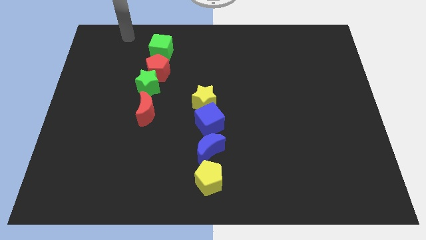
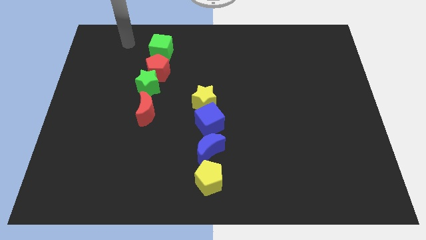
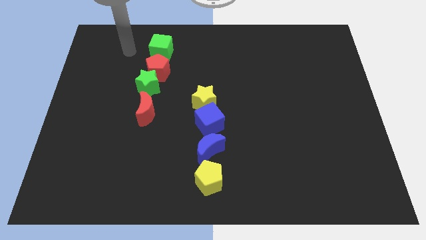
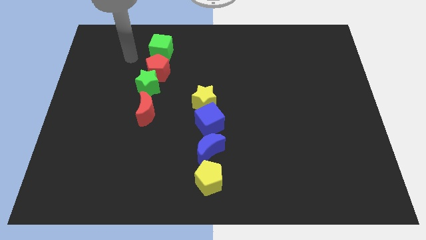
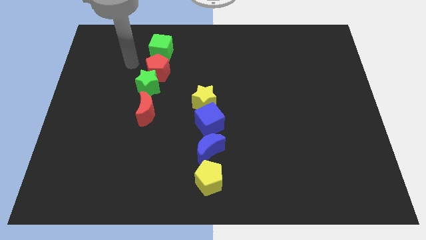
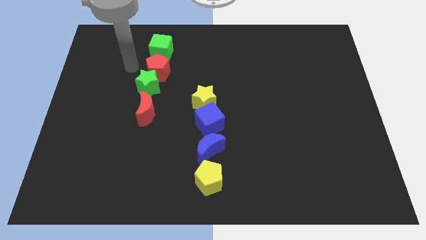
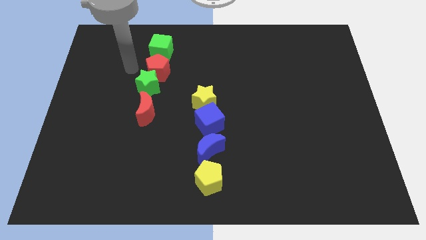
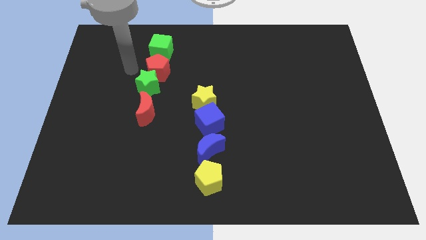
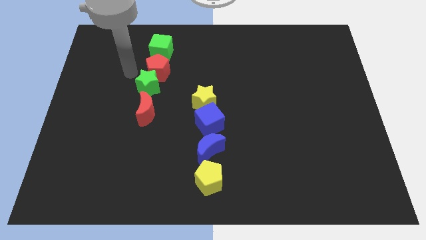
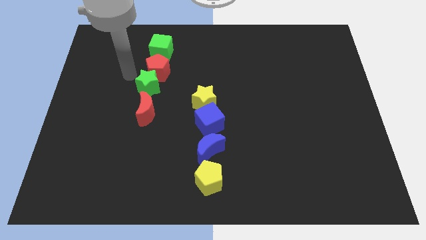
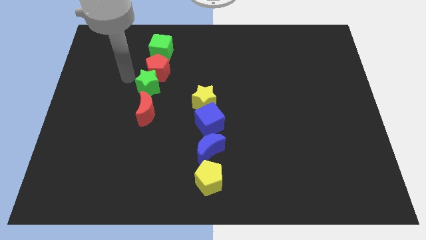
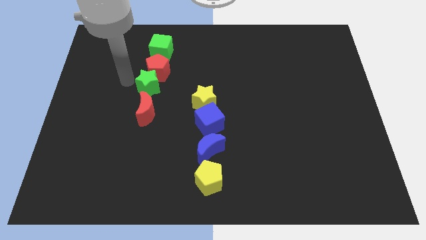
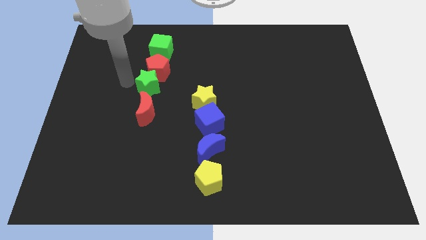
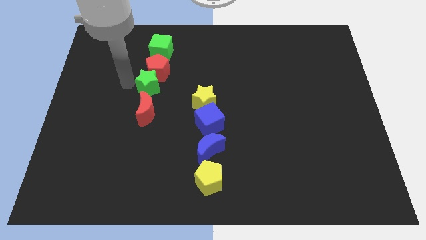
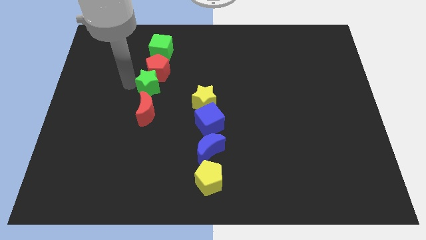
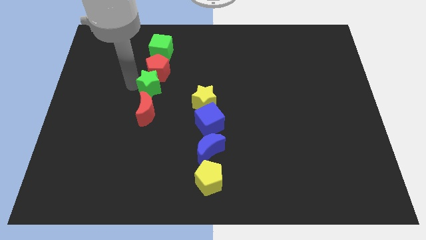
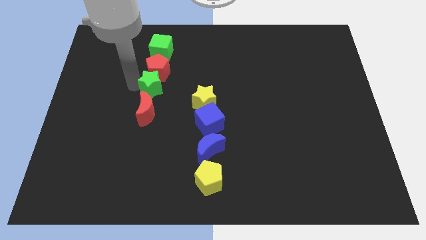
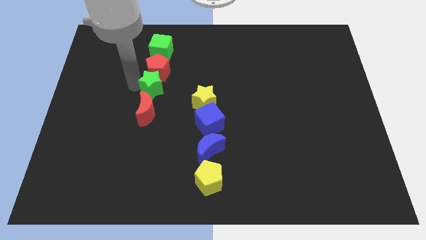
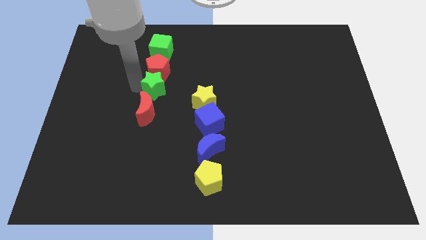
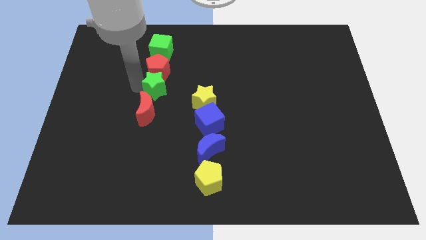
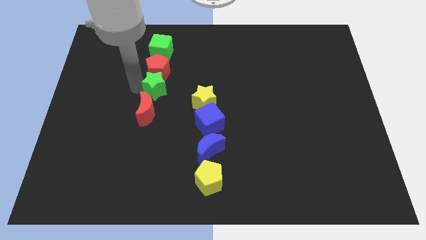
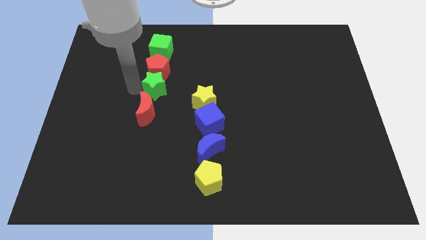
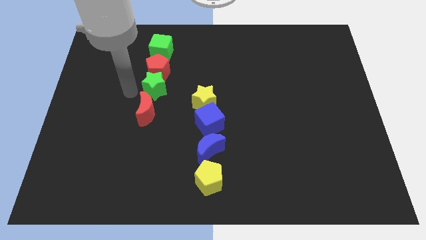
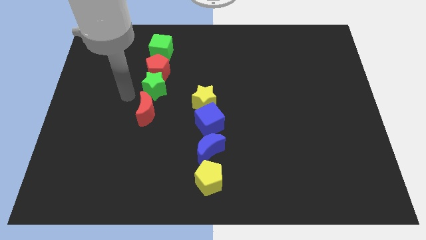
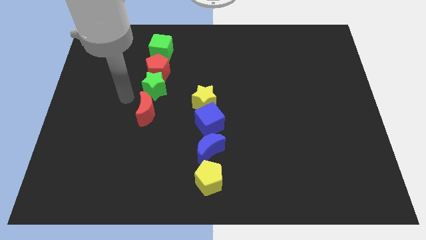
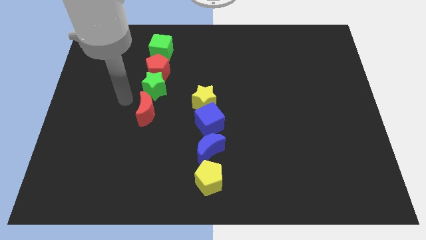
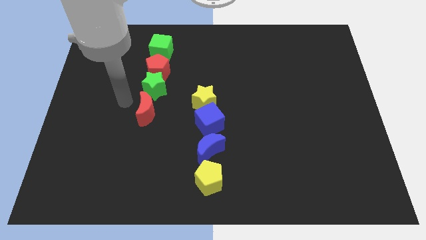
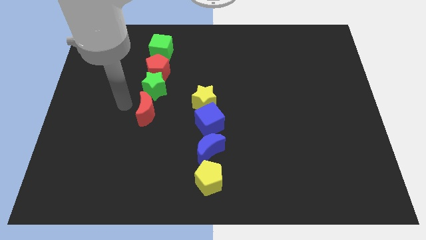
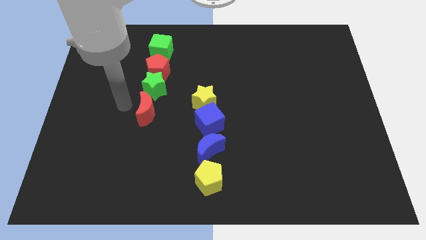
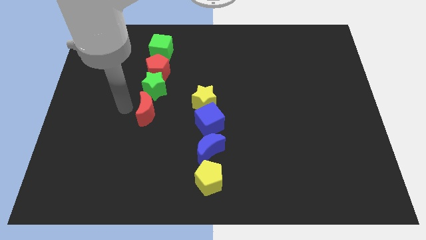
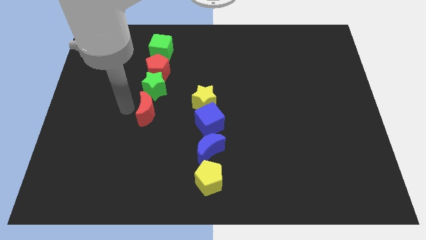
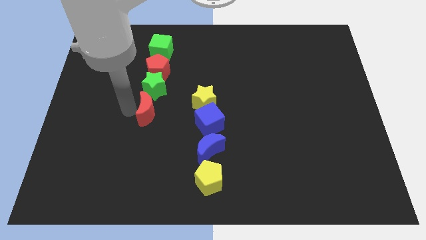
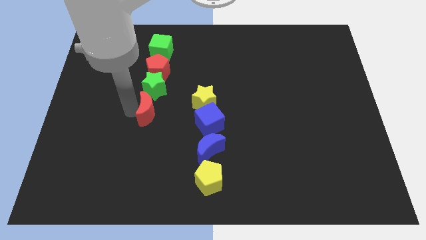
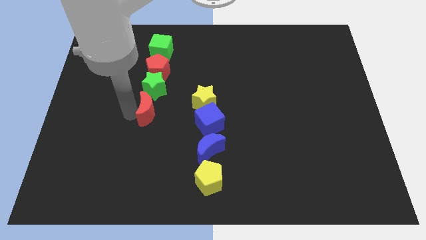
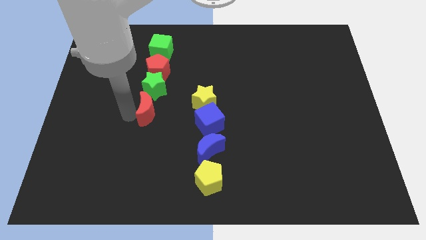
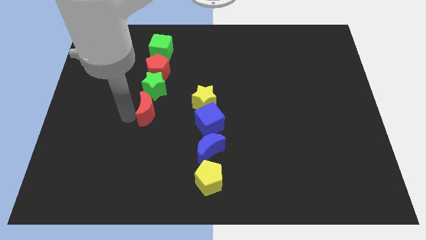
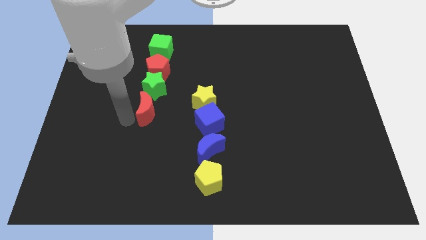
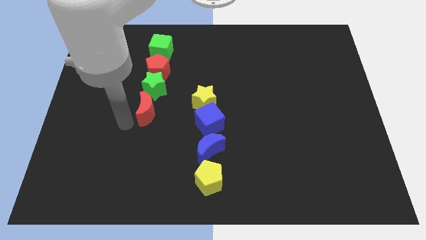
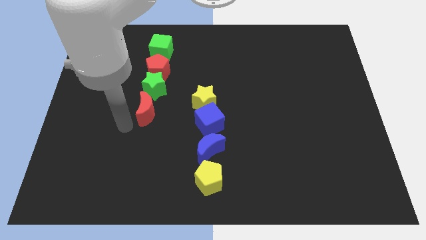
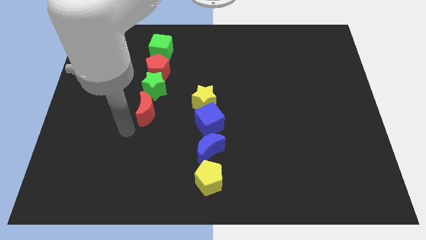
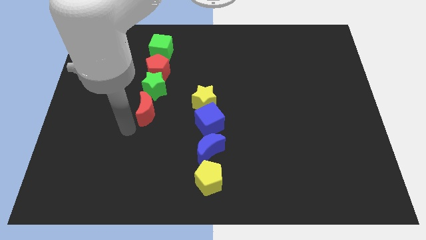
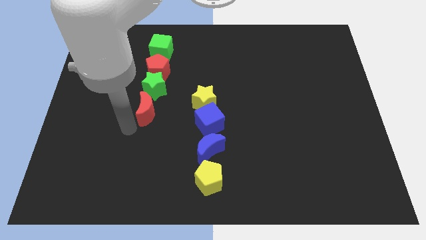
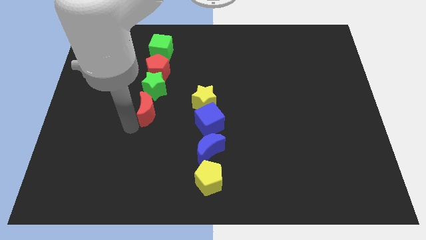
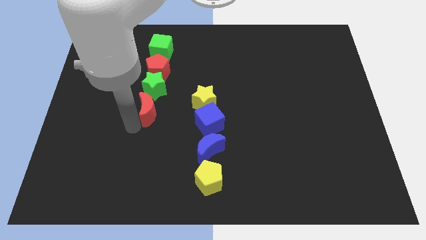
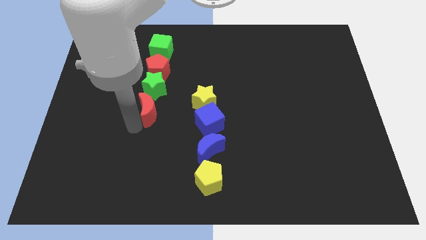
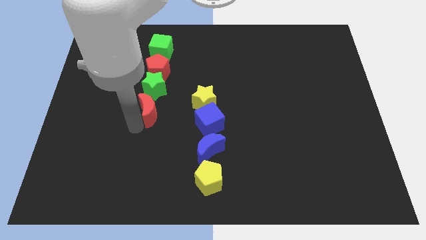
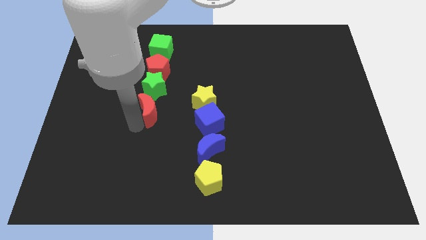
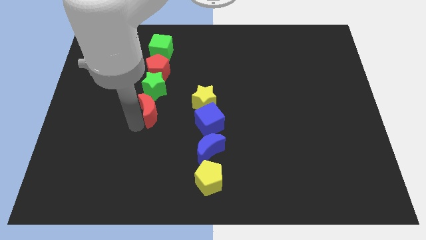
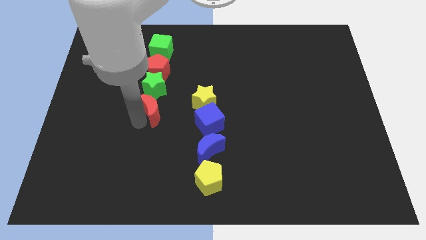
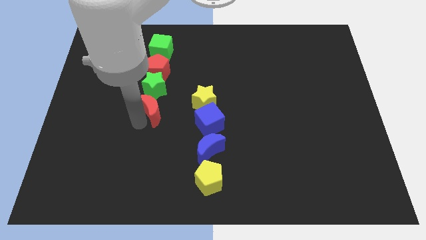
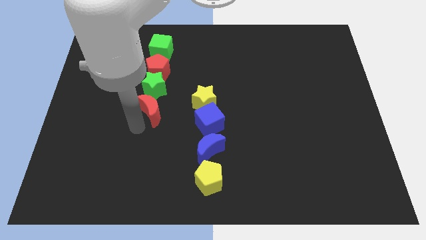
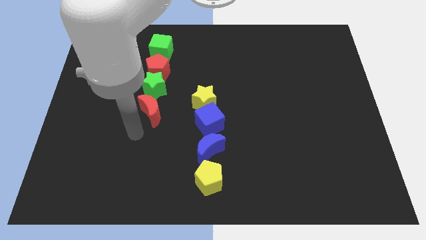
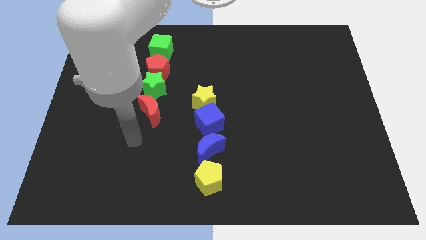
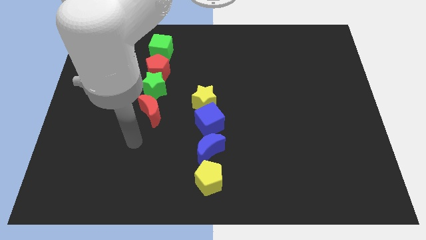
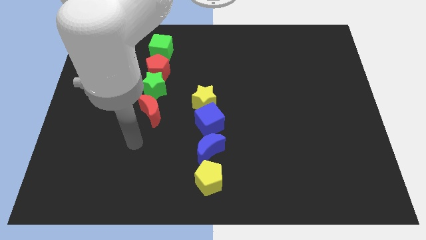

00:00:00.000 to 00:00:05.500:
adjust the blocks in the row properly

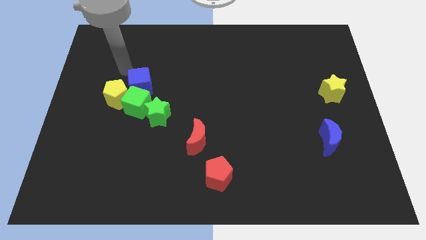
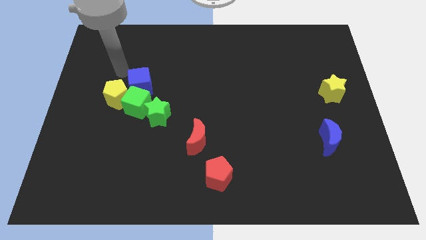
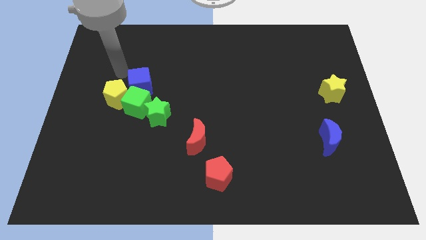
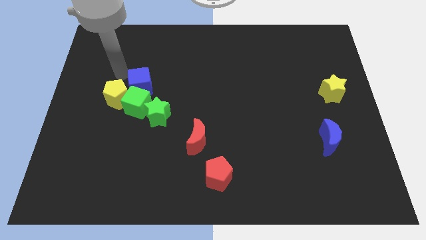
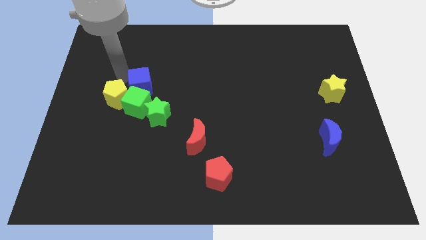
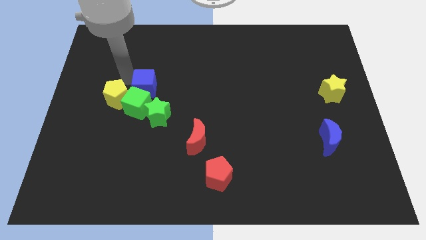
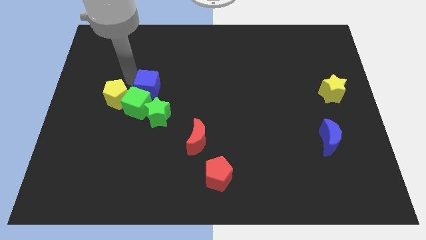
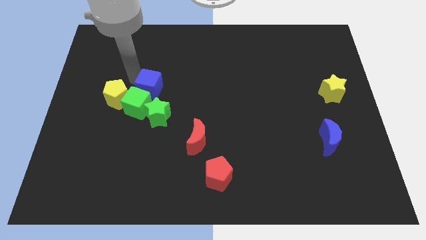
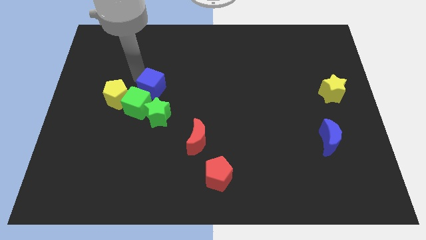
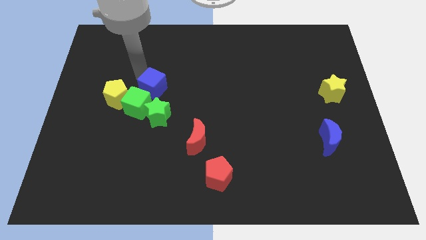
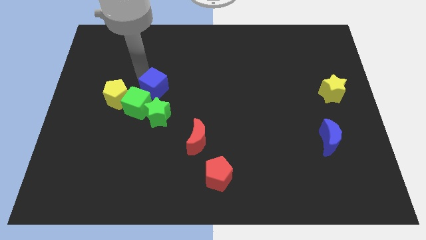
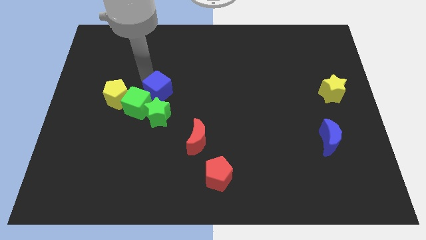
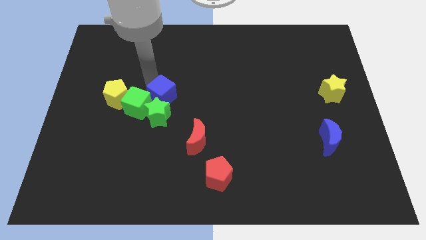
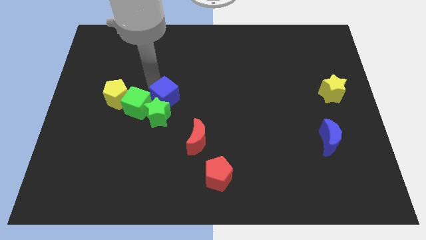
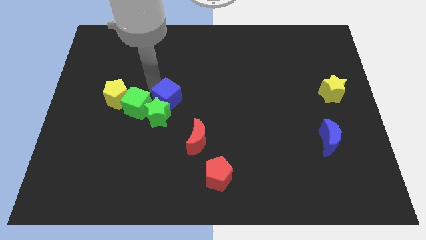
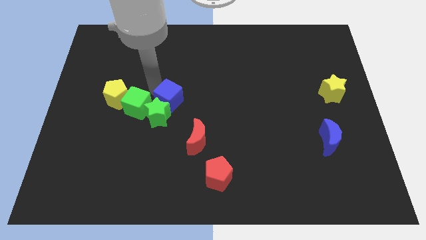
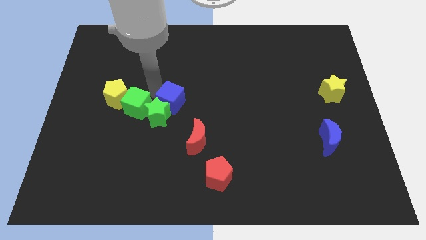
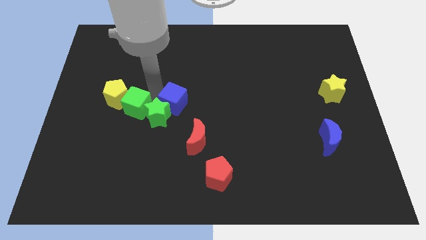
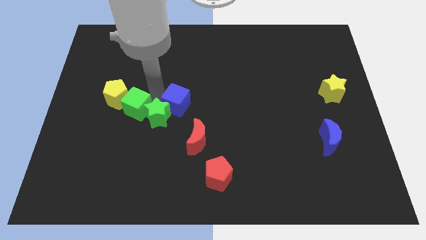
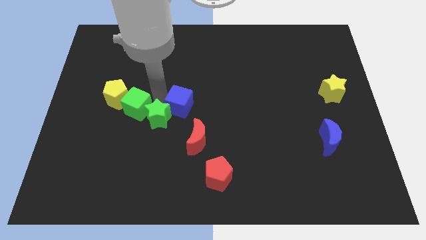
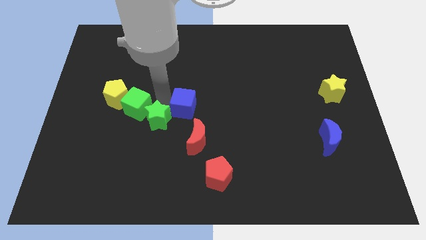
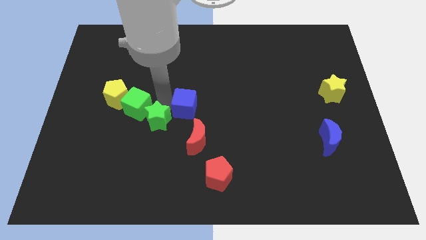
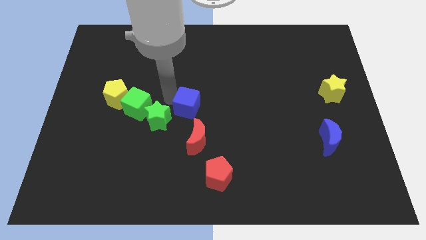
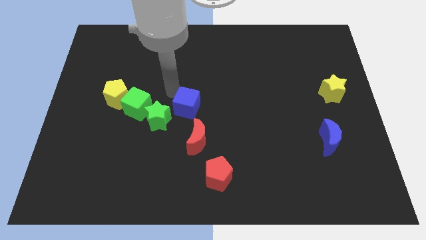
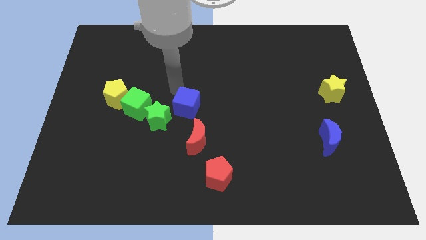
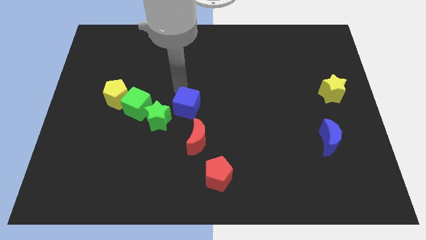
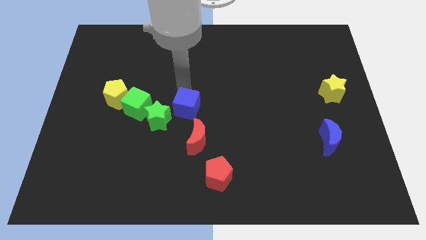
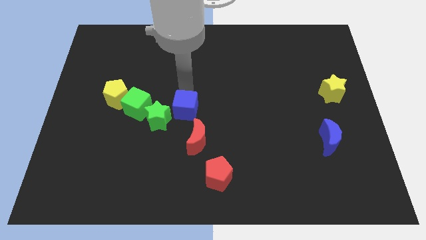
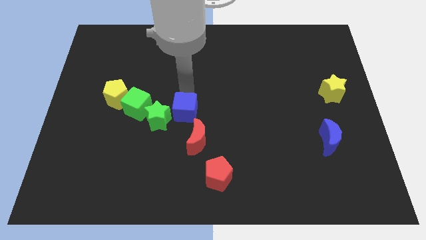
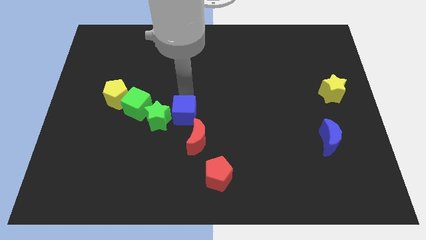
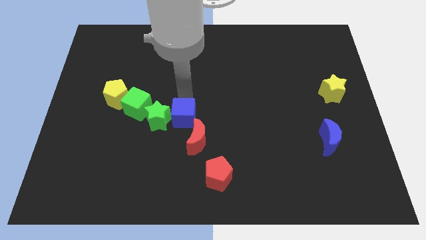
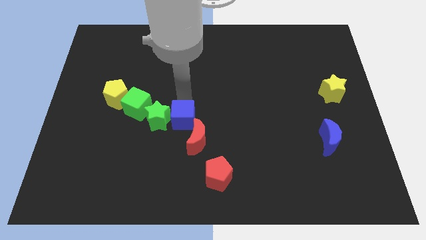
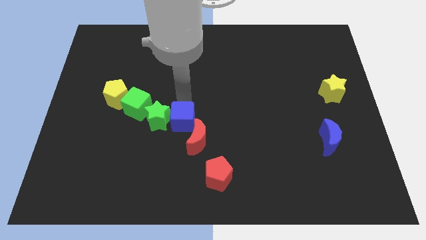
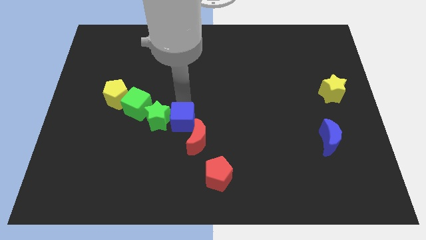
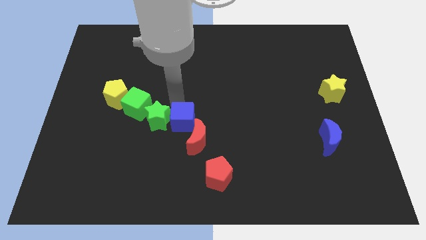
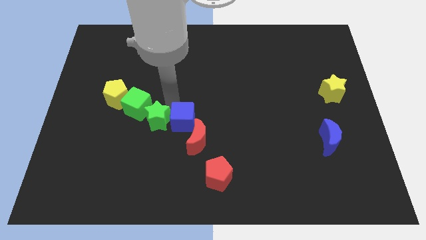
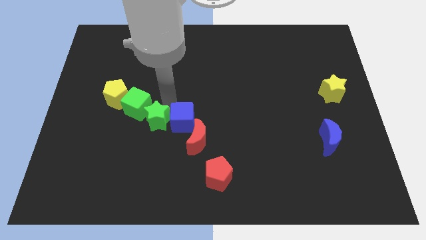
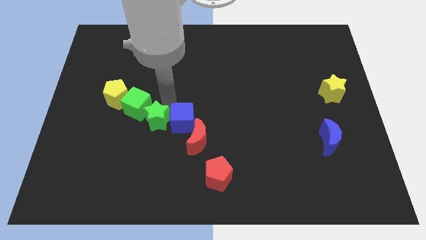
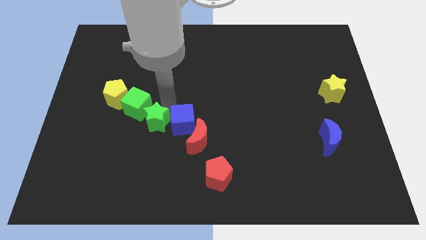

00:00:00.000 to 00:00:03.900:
place blue cube to the right of the green star
